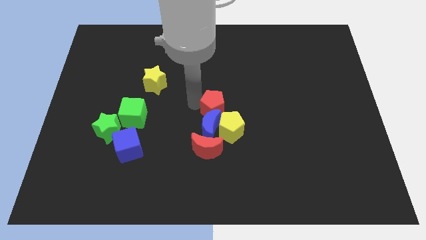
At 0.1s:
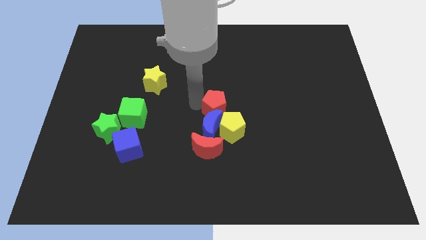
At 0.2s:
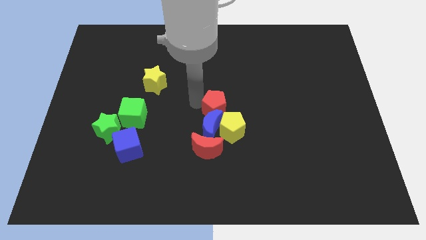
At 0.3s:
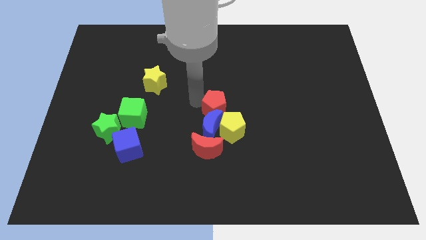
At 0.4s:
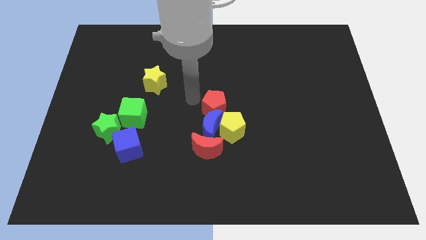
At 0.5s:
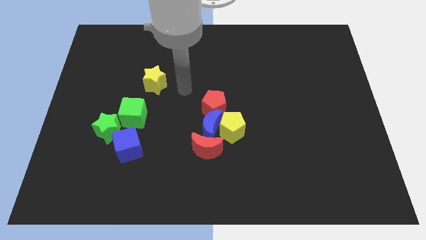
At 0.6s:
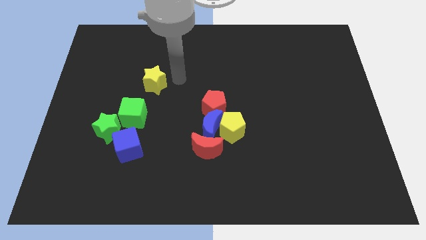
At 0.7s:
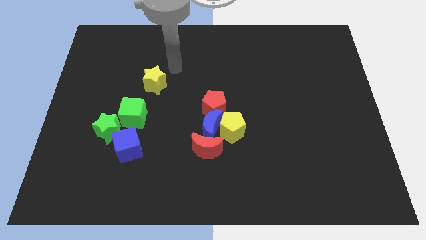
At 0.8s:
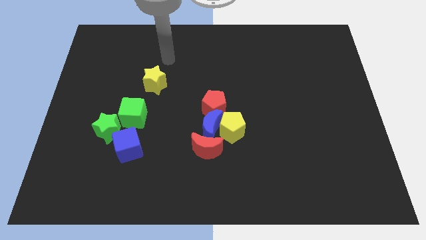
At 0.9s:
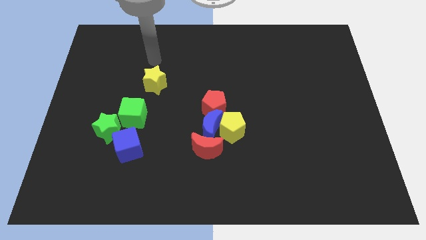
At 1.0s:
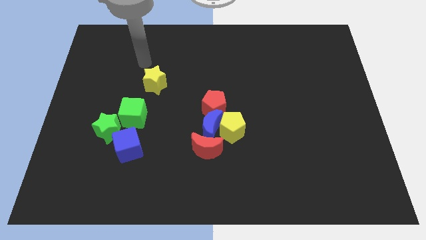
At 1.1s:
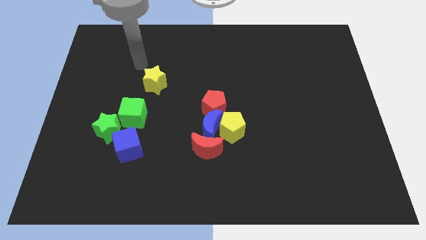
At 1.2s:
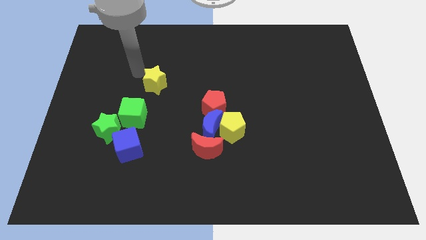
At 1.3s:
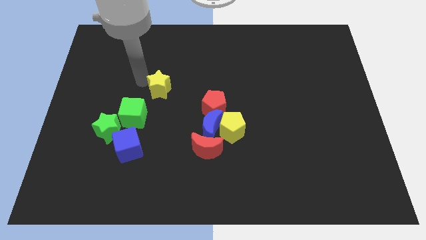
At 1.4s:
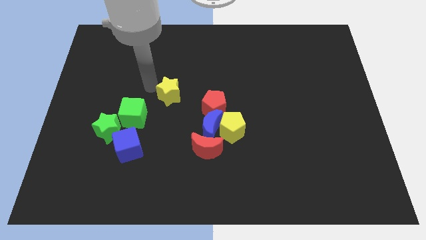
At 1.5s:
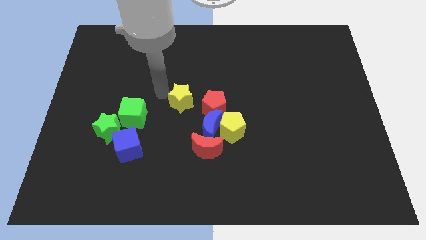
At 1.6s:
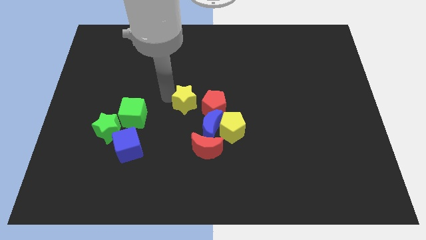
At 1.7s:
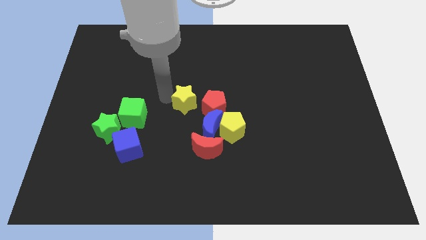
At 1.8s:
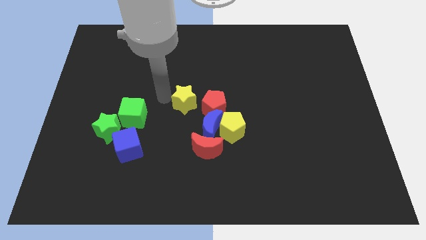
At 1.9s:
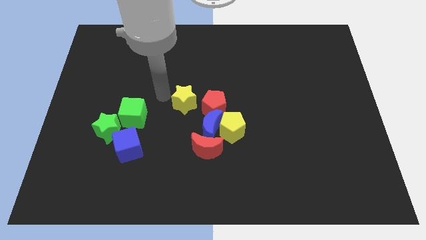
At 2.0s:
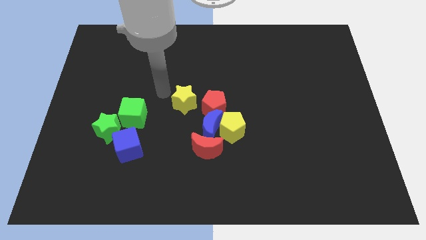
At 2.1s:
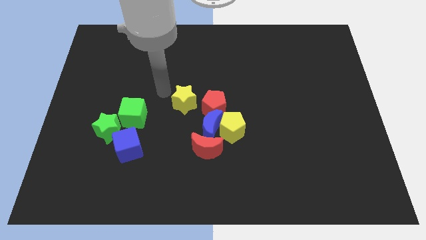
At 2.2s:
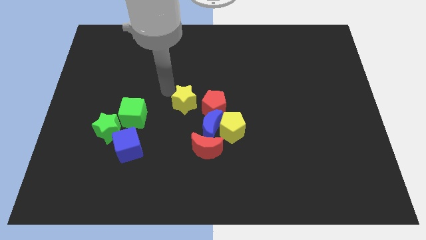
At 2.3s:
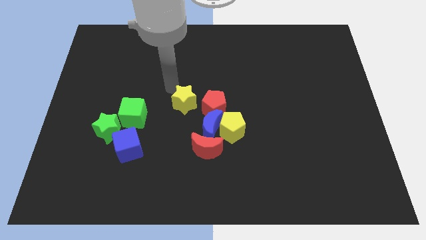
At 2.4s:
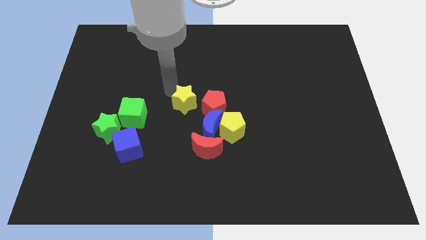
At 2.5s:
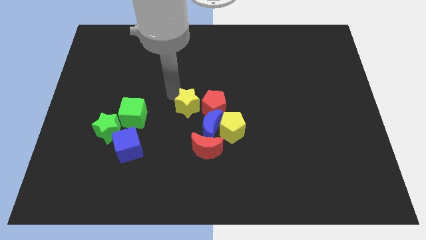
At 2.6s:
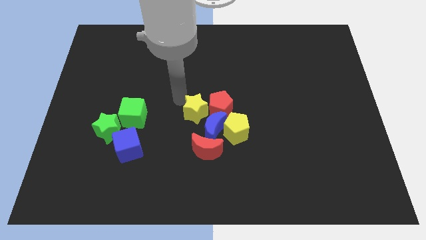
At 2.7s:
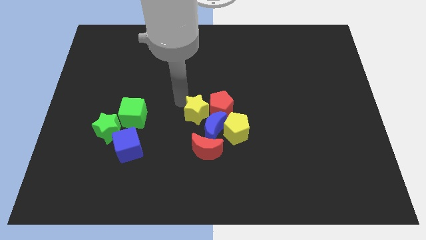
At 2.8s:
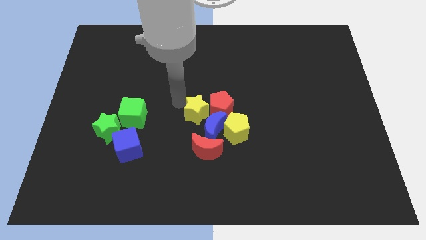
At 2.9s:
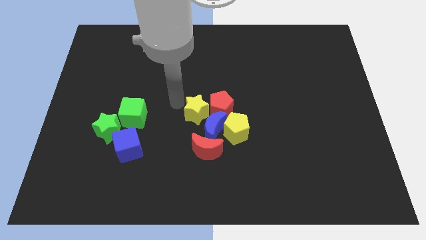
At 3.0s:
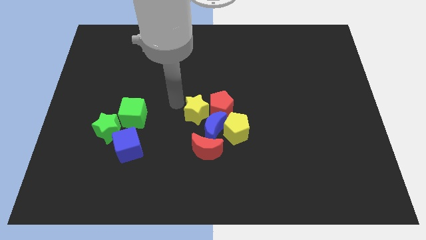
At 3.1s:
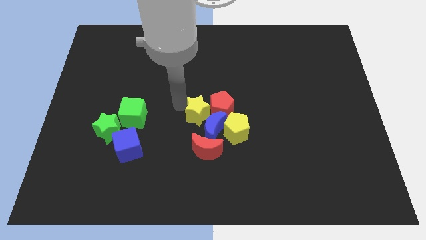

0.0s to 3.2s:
place the yellow star on the top left of the blue crescent

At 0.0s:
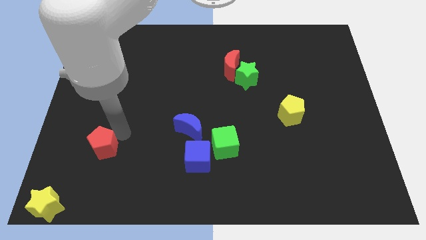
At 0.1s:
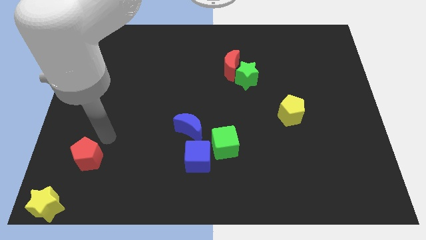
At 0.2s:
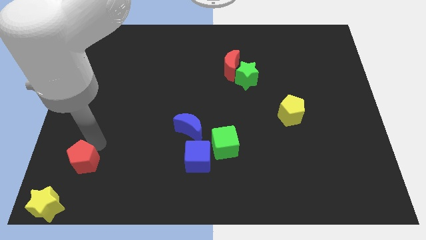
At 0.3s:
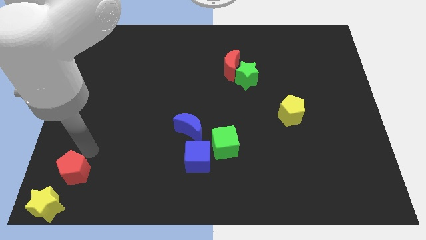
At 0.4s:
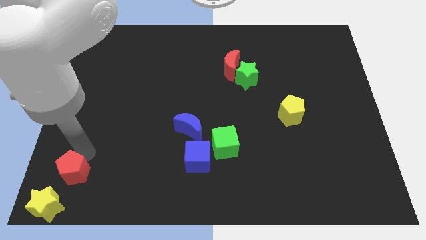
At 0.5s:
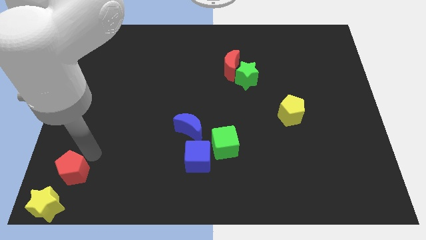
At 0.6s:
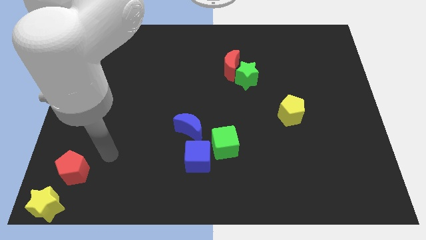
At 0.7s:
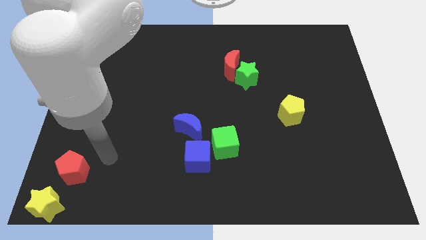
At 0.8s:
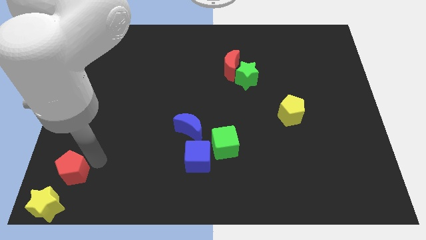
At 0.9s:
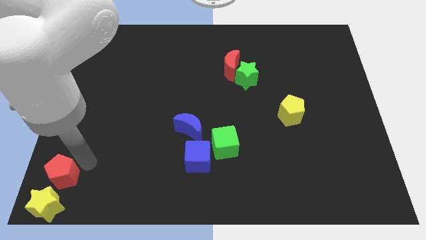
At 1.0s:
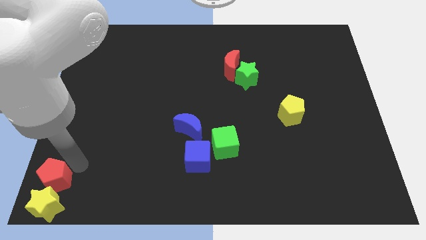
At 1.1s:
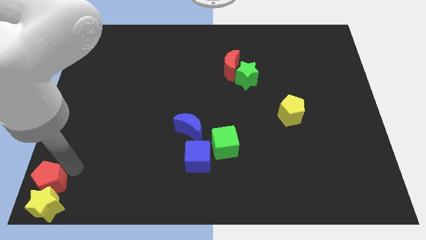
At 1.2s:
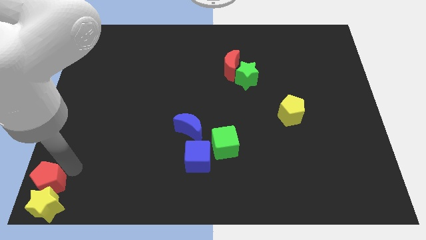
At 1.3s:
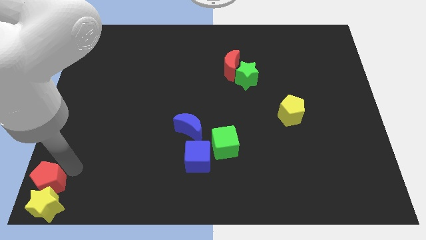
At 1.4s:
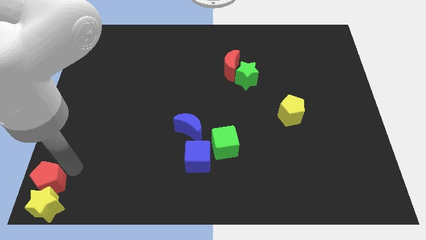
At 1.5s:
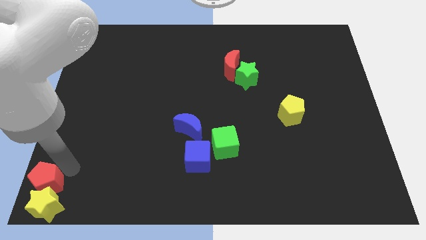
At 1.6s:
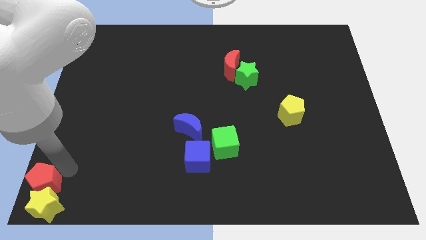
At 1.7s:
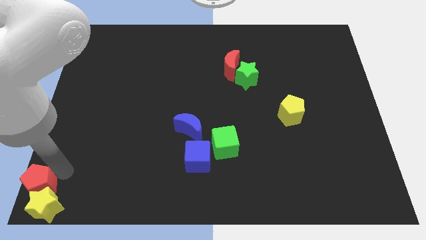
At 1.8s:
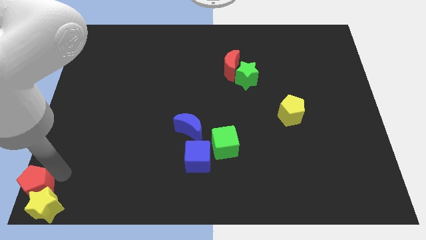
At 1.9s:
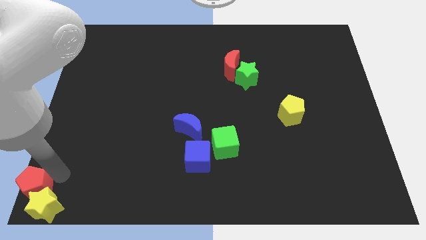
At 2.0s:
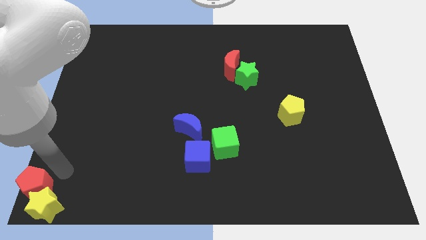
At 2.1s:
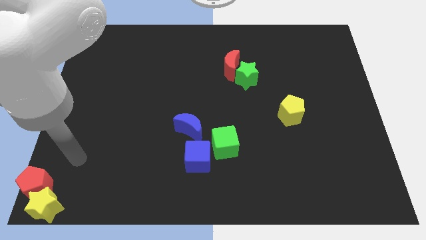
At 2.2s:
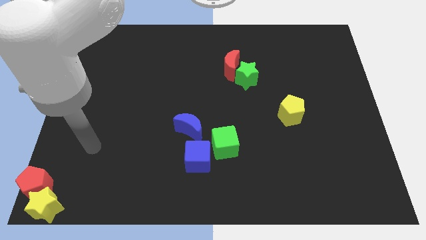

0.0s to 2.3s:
push the red pentagon into the yellow star

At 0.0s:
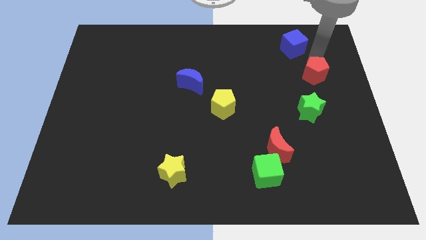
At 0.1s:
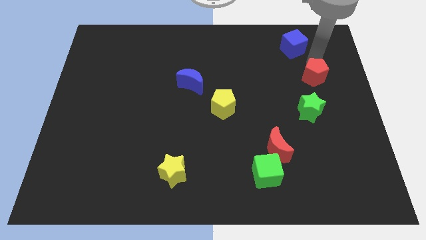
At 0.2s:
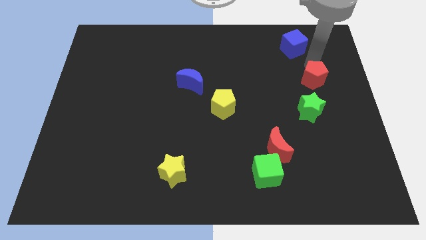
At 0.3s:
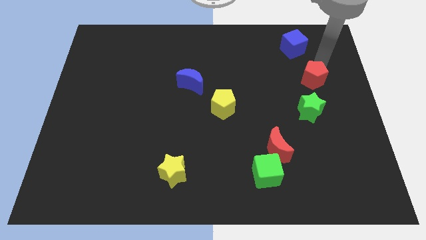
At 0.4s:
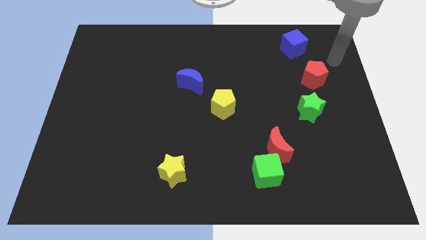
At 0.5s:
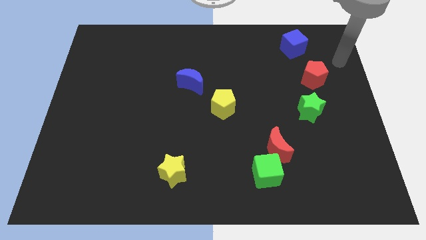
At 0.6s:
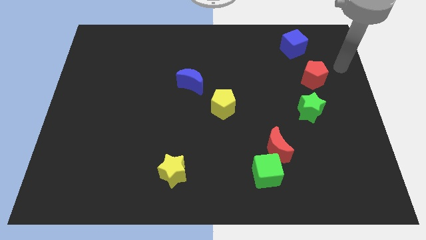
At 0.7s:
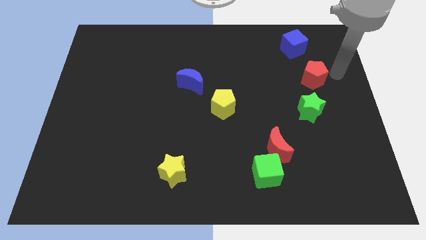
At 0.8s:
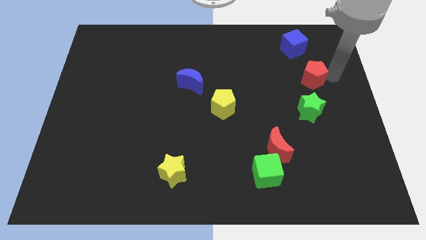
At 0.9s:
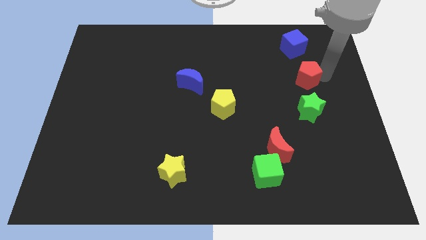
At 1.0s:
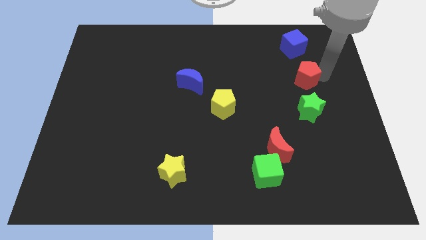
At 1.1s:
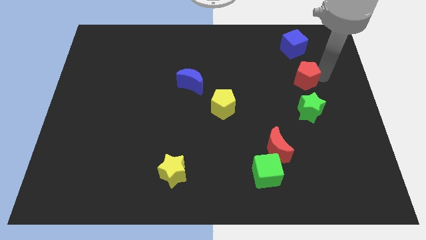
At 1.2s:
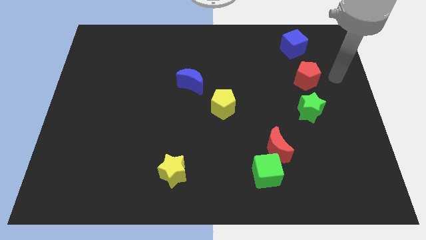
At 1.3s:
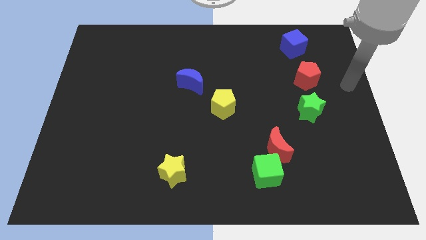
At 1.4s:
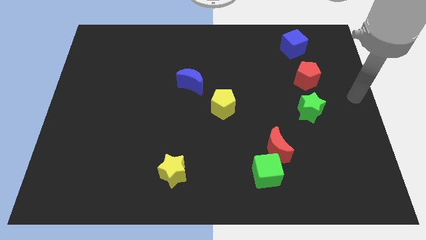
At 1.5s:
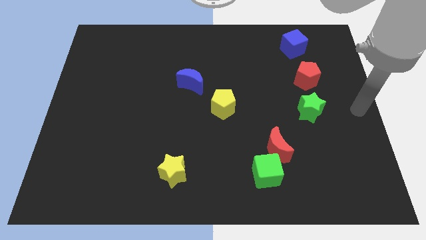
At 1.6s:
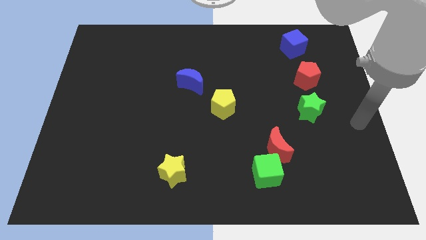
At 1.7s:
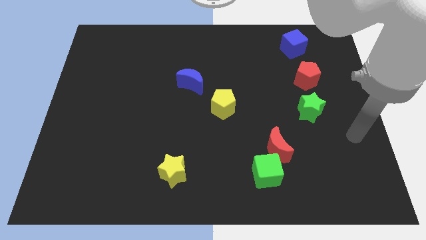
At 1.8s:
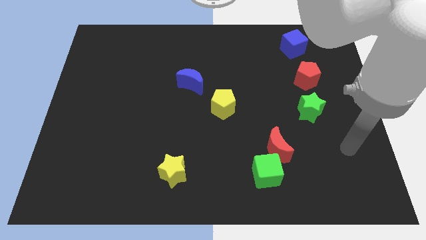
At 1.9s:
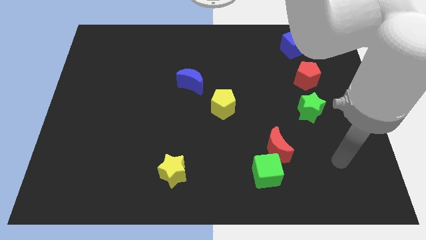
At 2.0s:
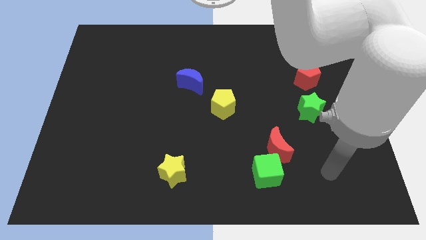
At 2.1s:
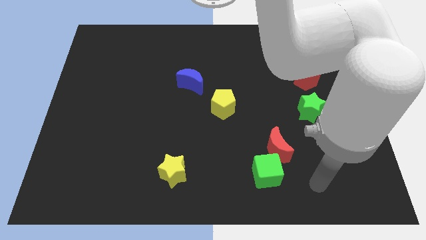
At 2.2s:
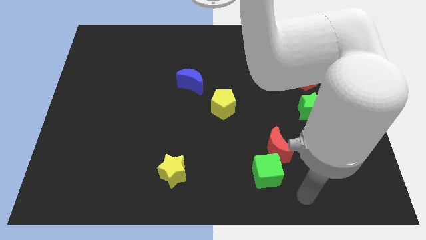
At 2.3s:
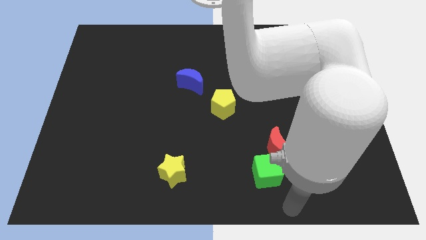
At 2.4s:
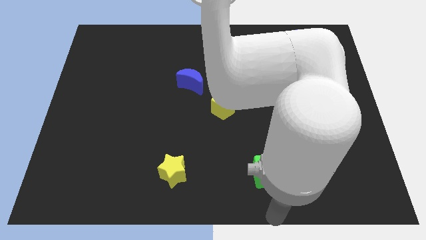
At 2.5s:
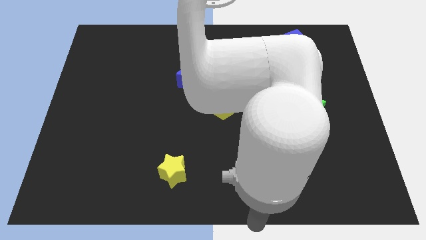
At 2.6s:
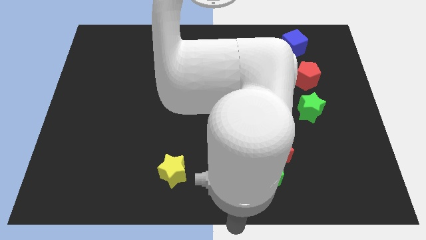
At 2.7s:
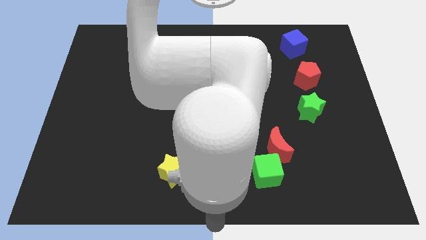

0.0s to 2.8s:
move red pentagon slightly

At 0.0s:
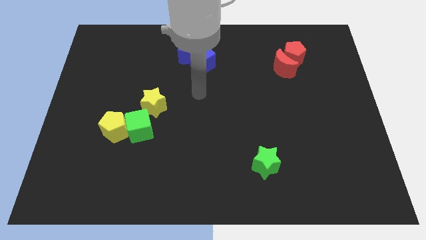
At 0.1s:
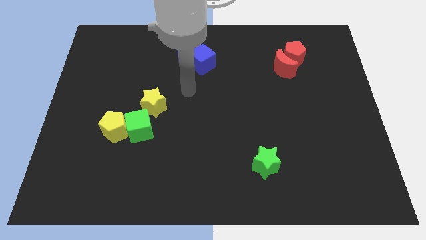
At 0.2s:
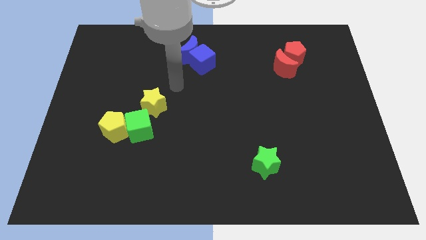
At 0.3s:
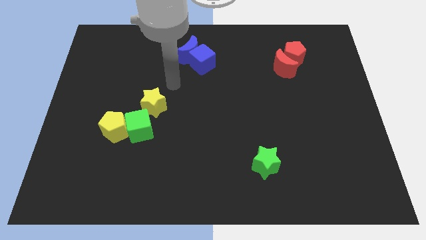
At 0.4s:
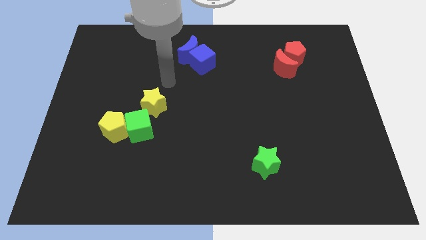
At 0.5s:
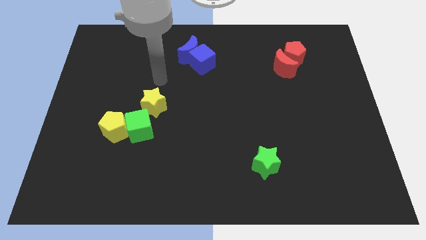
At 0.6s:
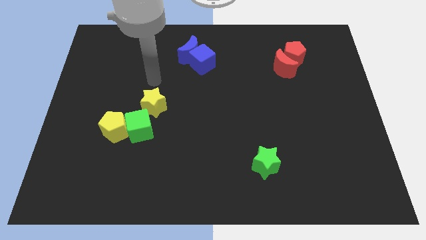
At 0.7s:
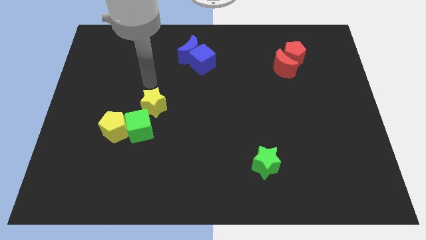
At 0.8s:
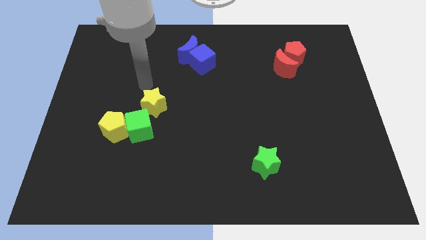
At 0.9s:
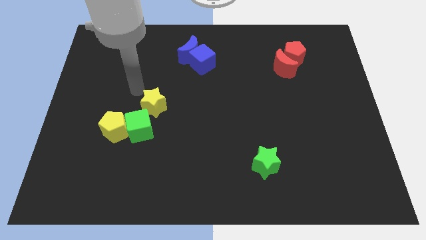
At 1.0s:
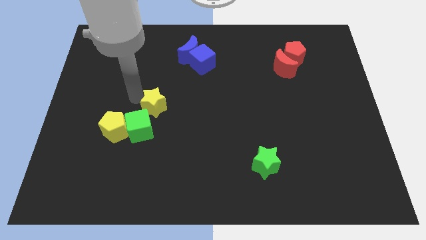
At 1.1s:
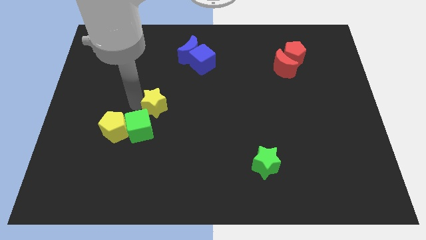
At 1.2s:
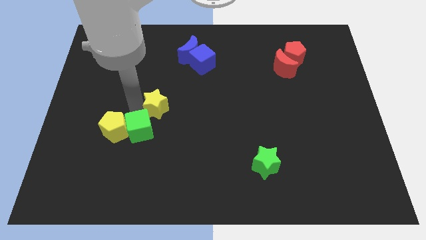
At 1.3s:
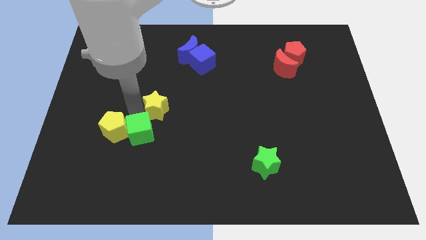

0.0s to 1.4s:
place your arm at the top of green cube
